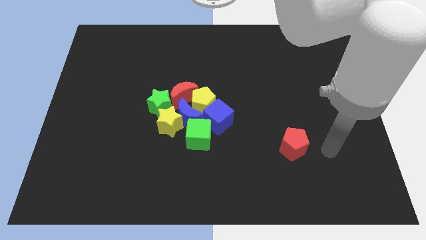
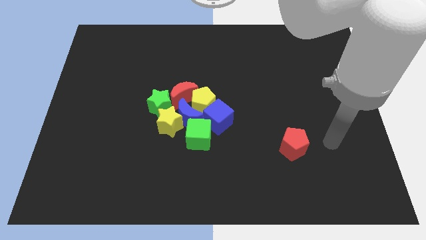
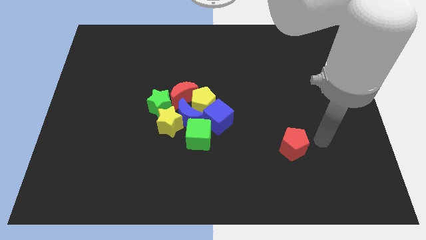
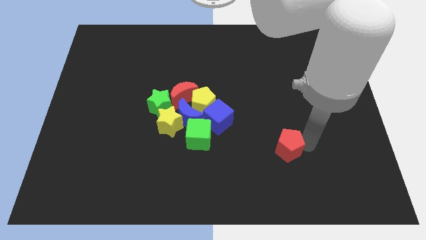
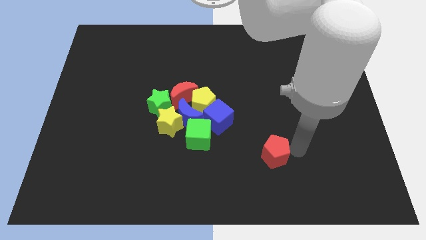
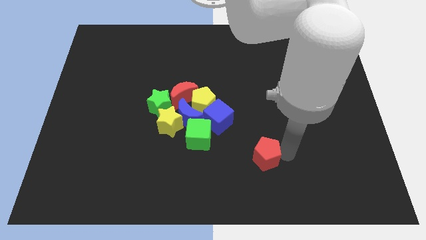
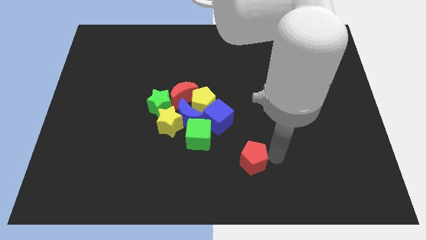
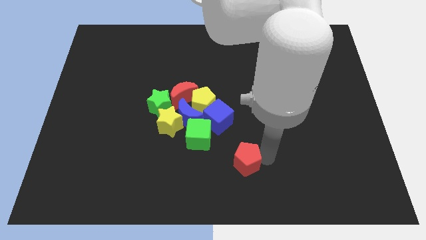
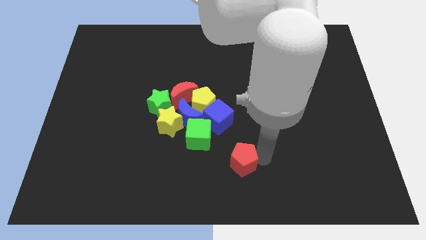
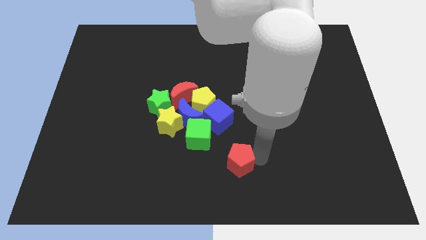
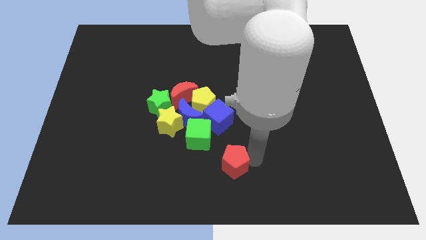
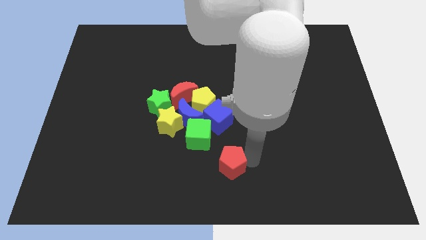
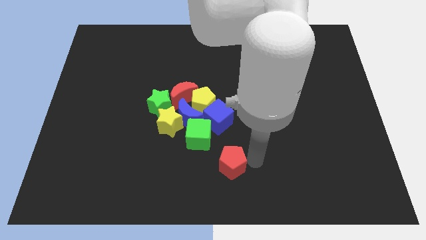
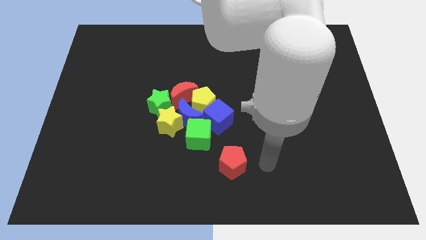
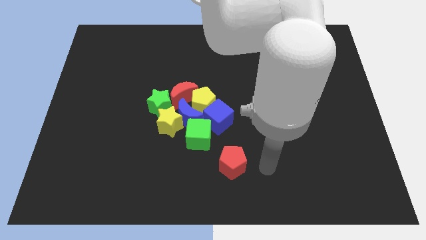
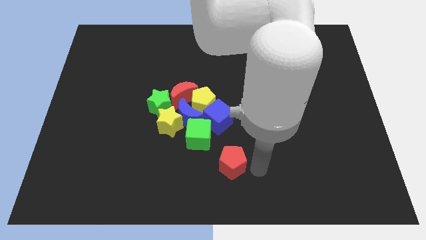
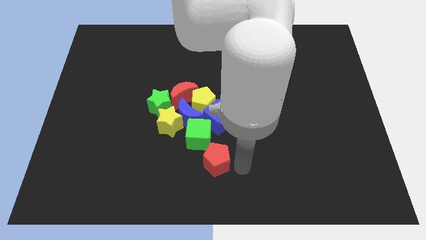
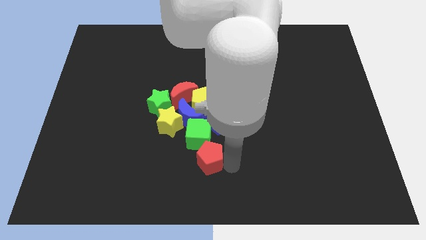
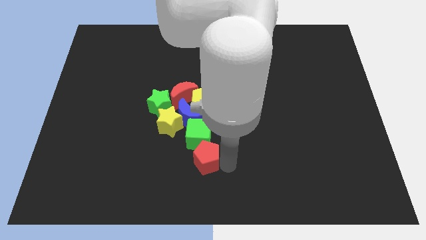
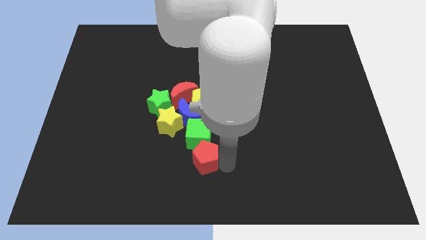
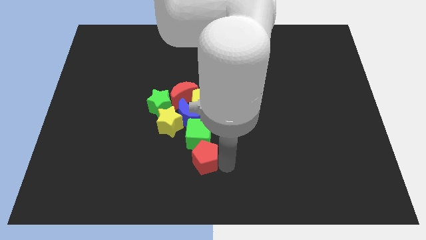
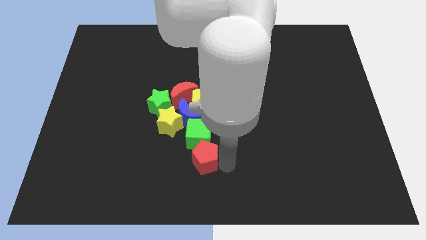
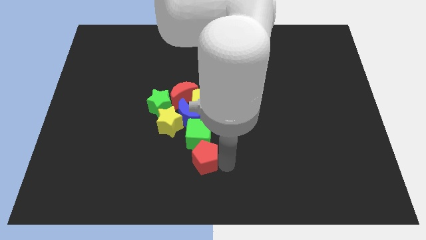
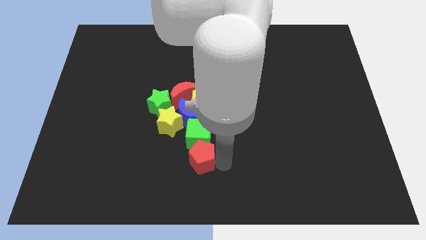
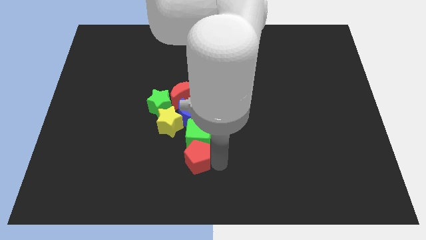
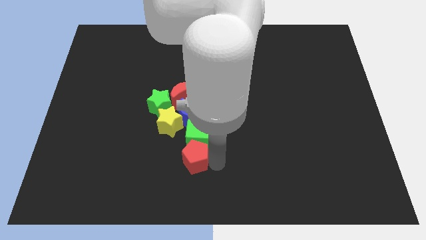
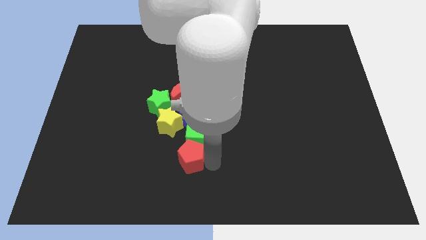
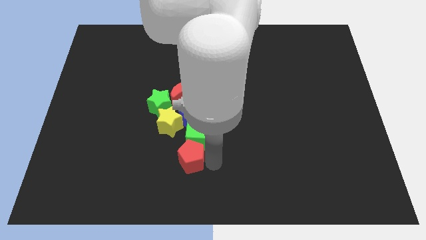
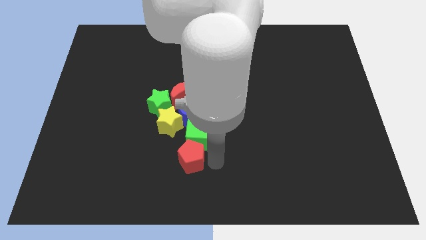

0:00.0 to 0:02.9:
move the red pentagon down to the green cube

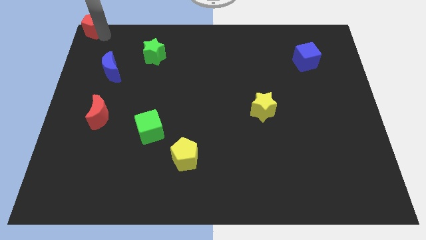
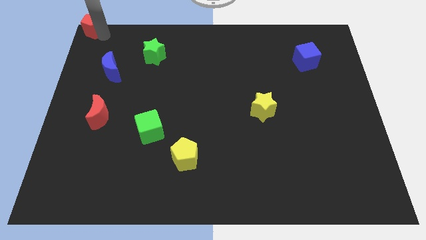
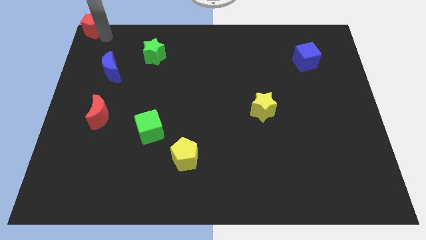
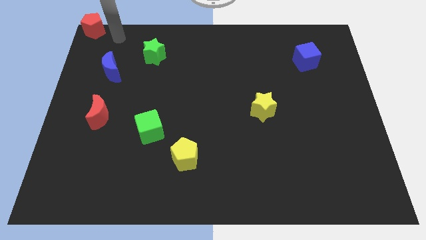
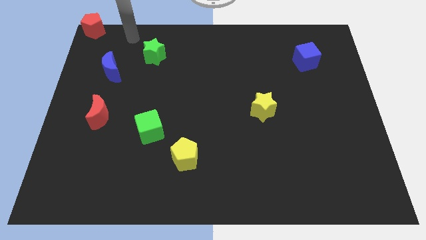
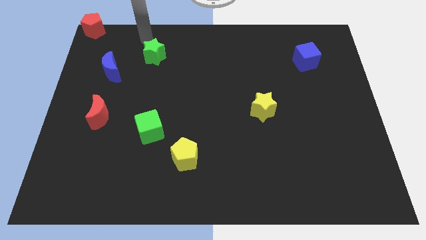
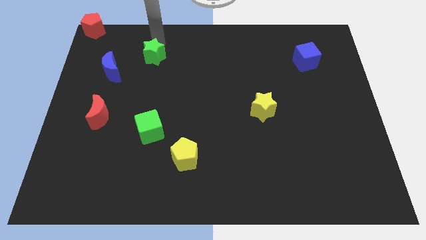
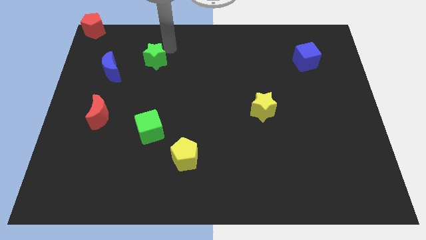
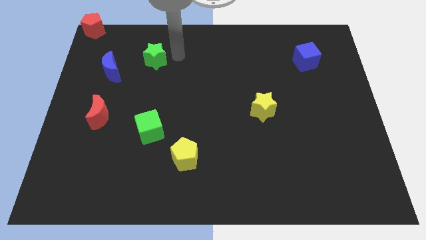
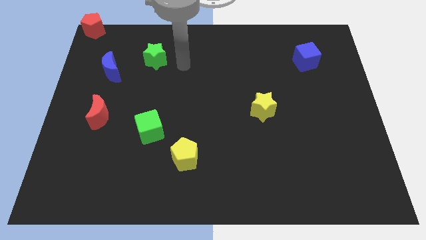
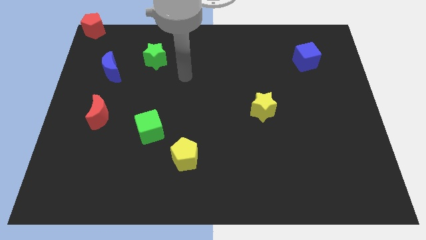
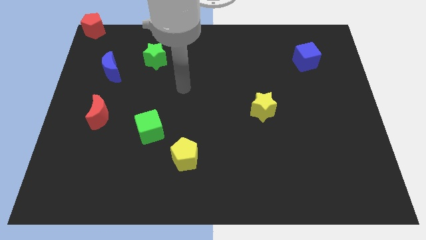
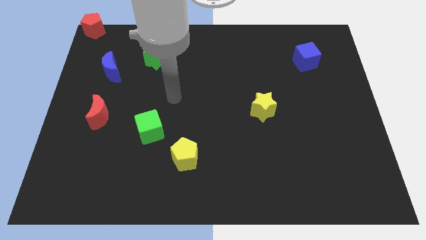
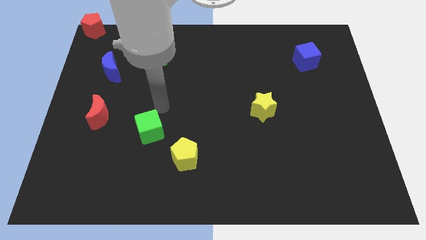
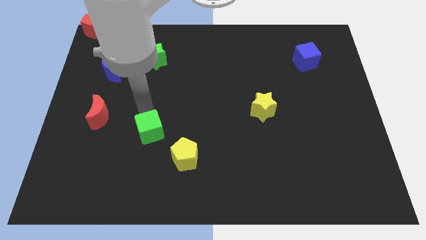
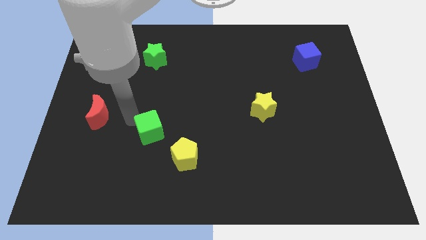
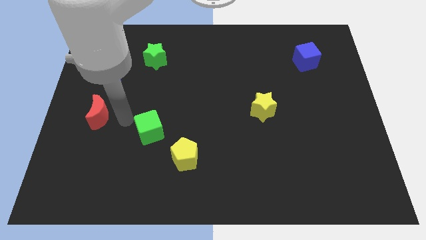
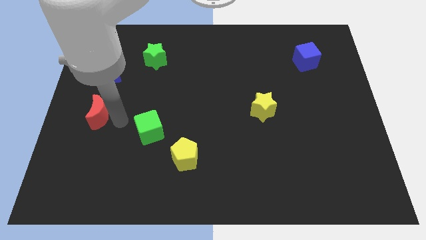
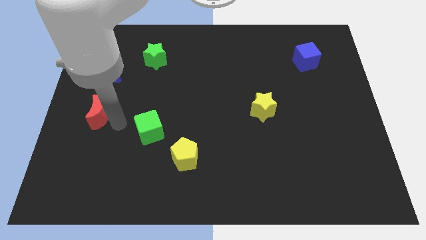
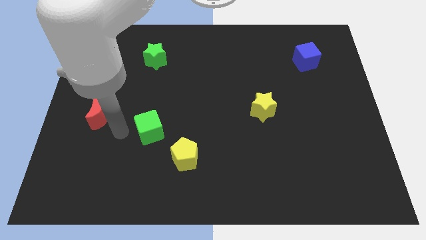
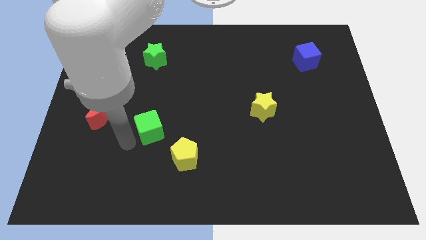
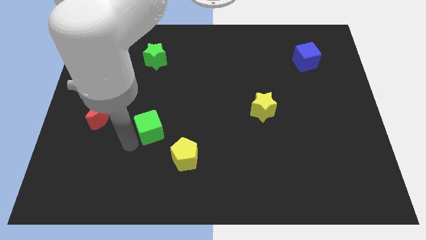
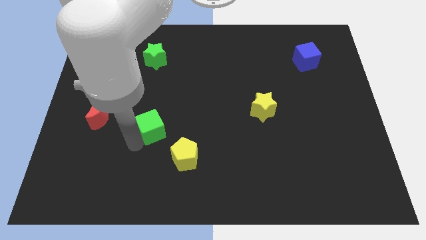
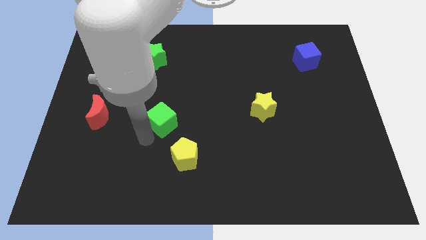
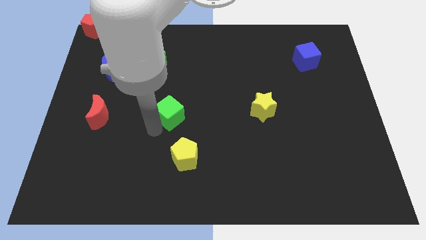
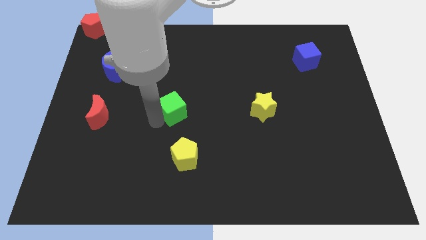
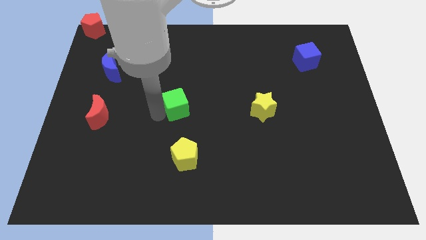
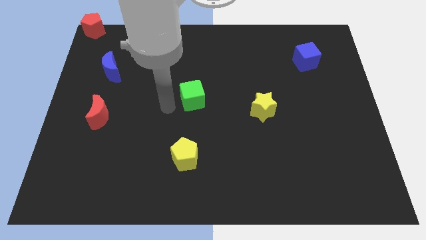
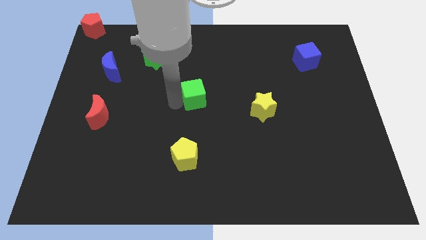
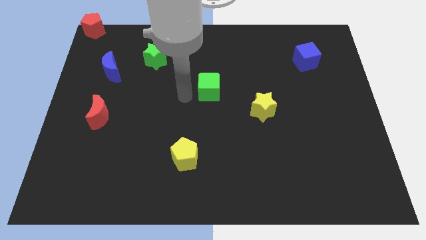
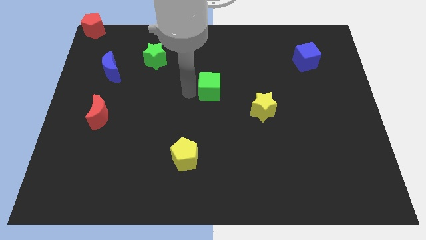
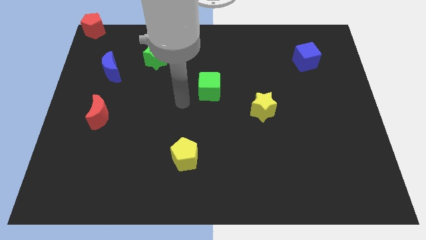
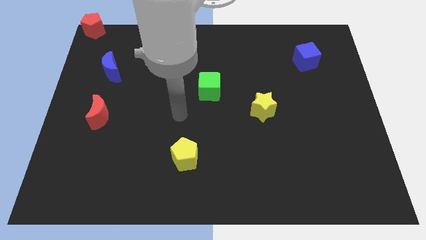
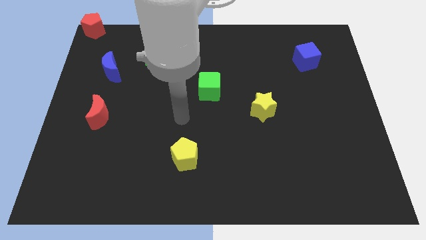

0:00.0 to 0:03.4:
move the green cube to the center of the board

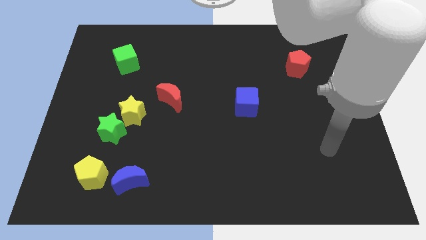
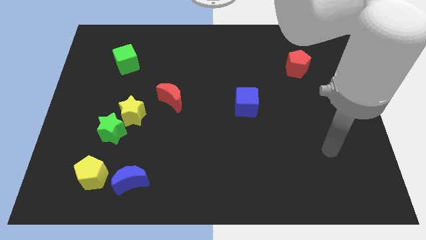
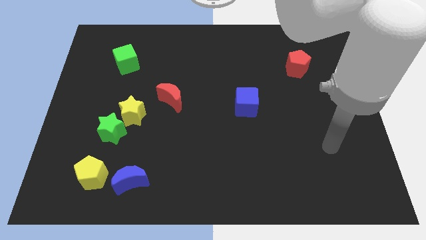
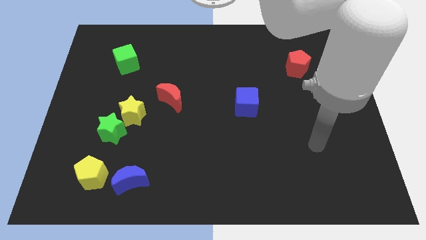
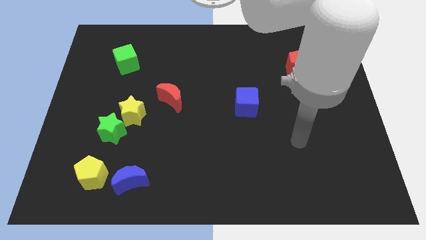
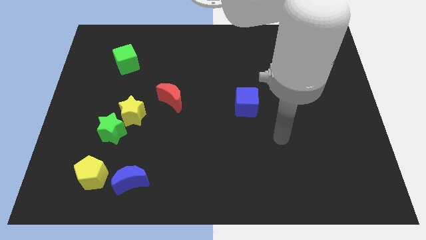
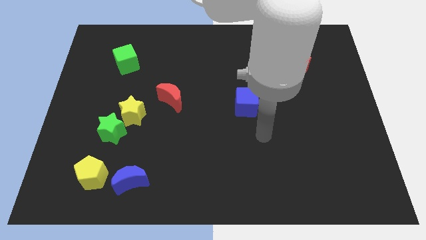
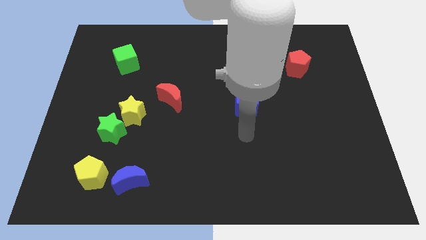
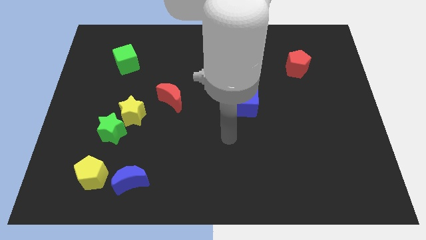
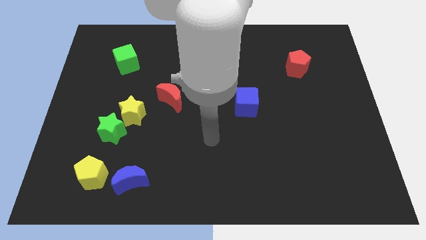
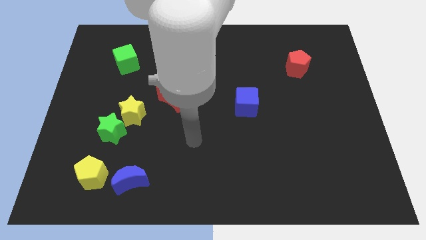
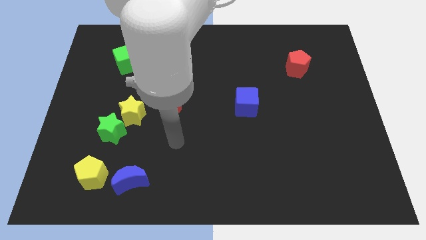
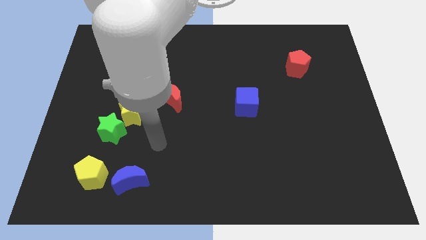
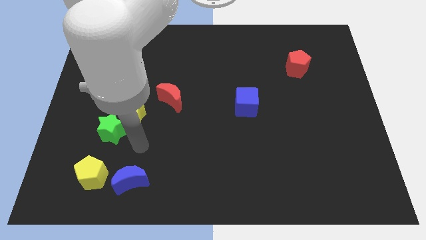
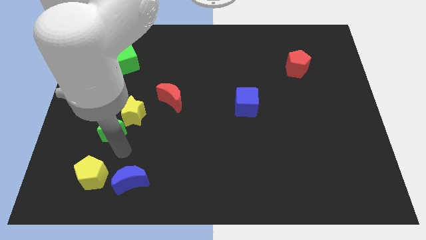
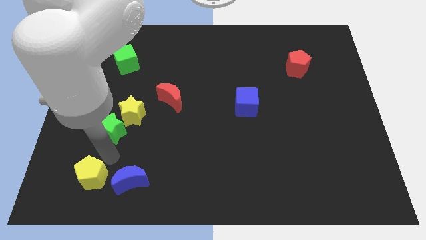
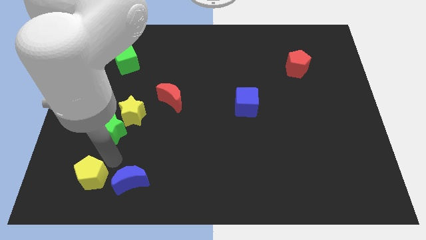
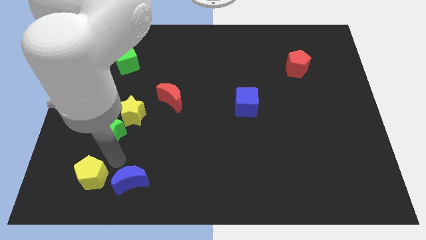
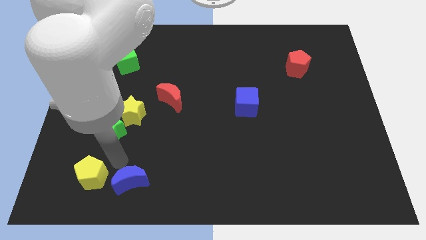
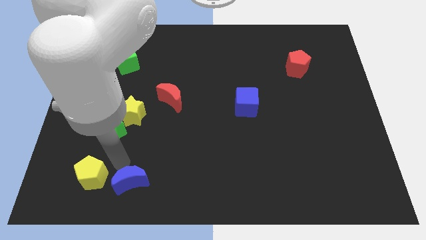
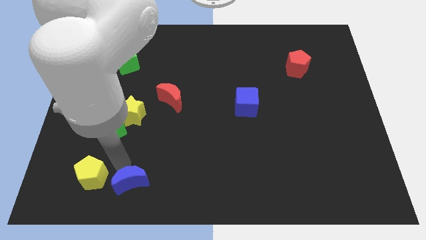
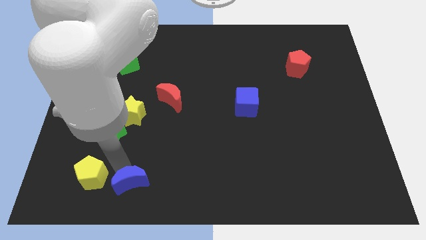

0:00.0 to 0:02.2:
point your hand above the blue moon

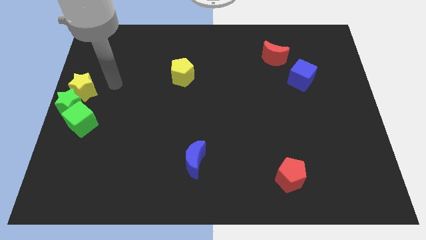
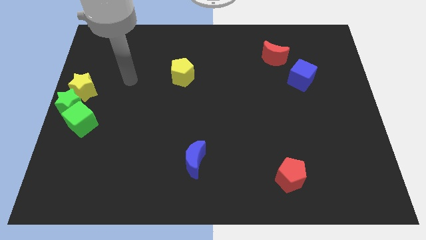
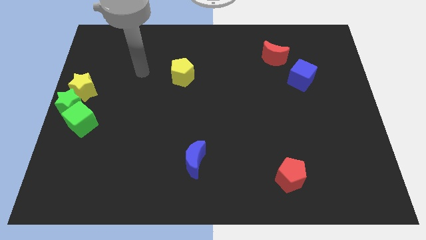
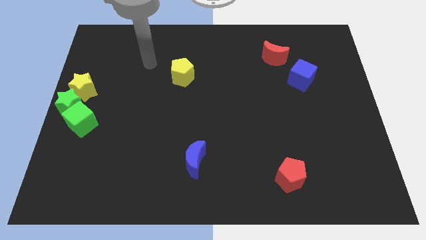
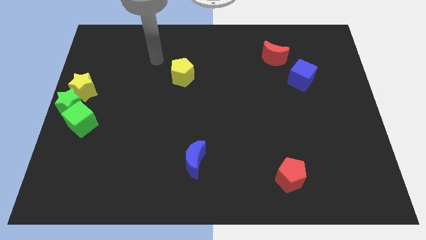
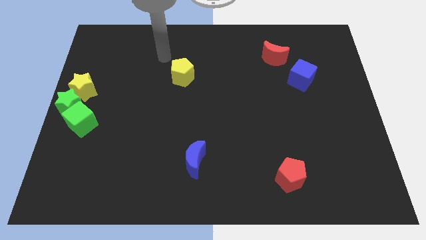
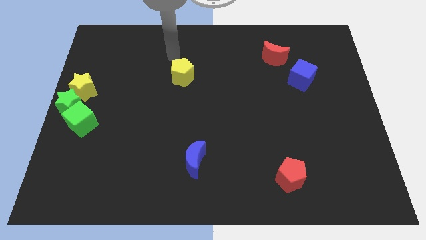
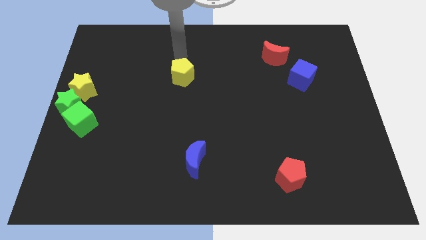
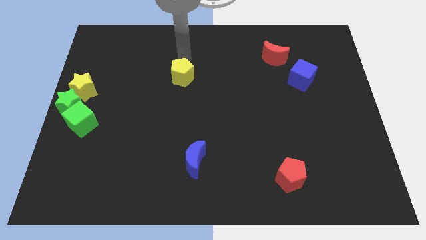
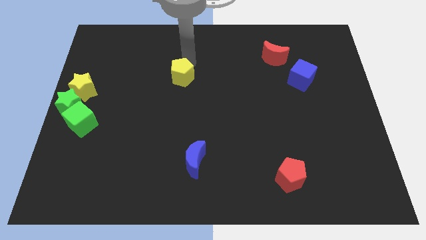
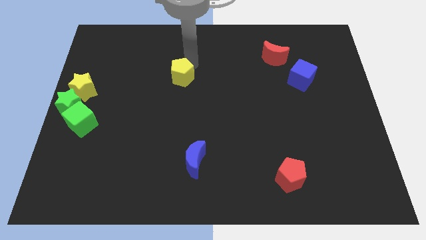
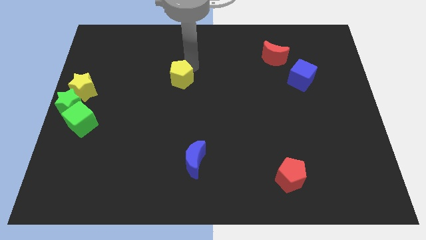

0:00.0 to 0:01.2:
tap the yellow pentagon
